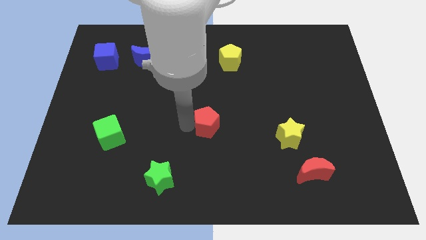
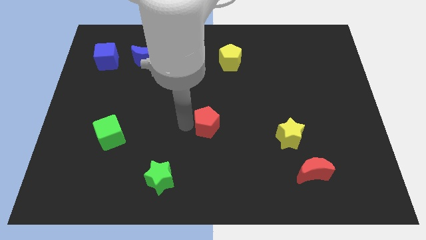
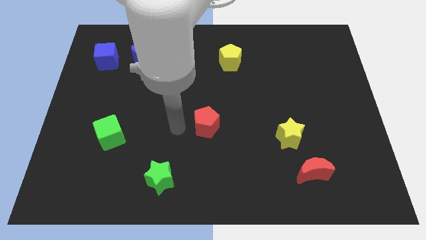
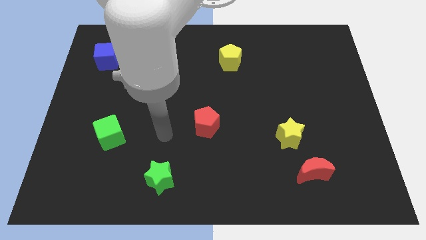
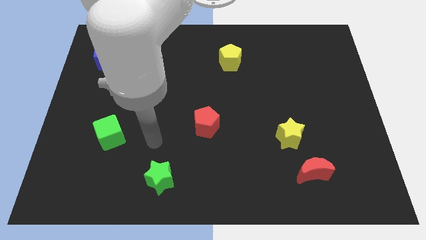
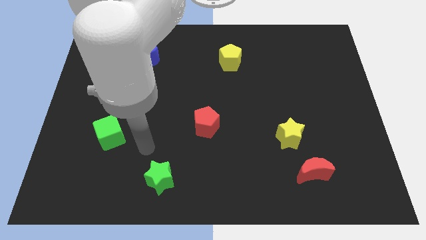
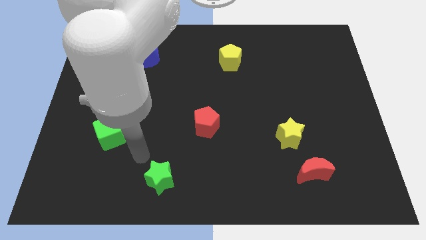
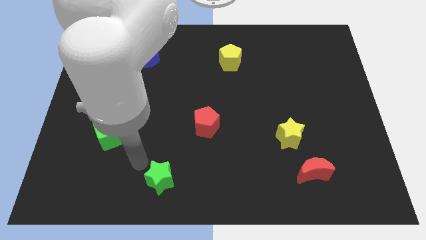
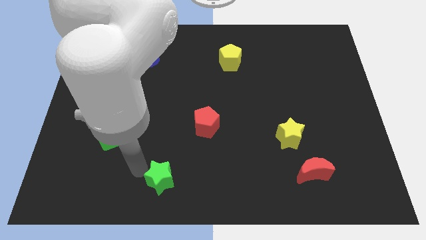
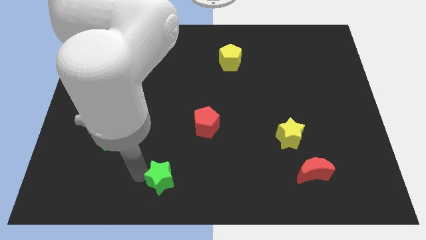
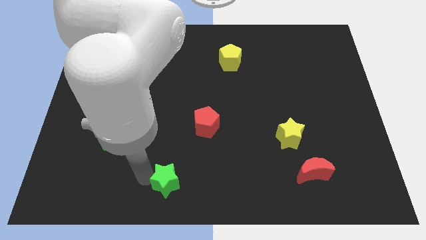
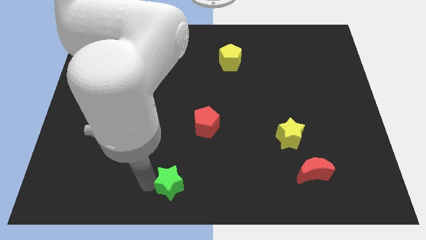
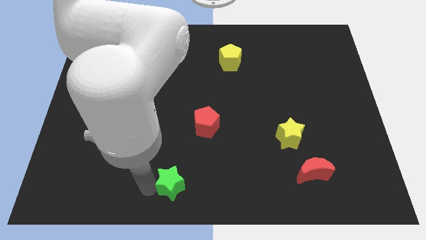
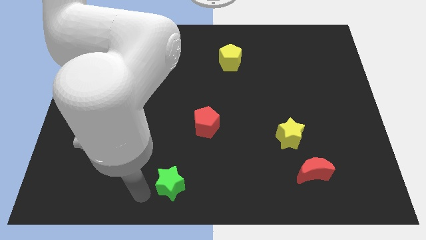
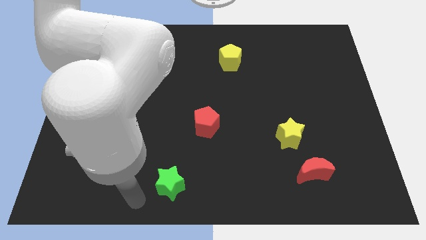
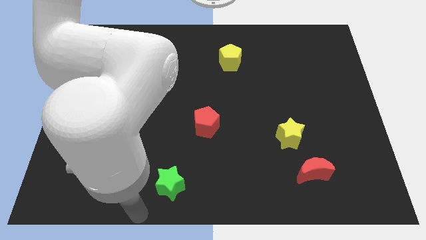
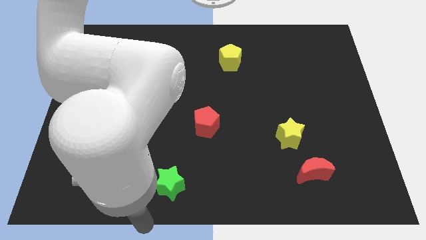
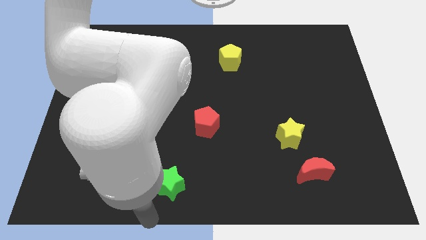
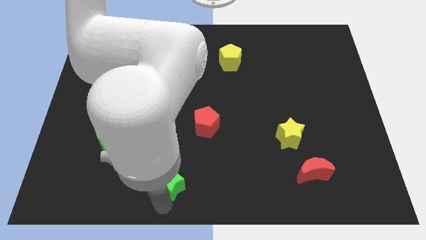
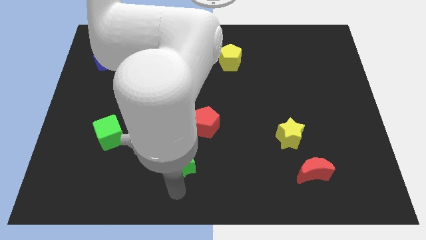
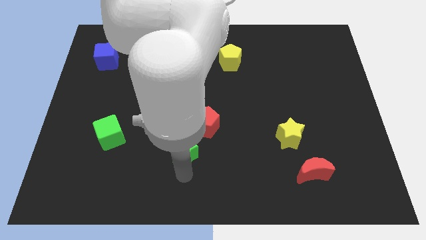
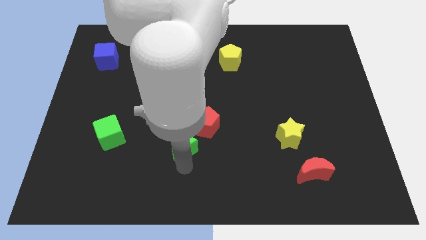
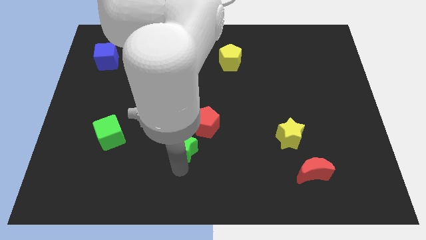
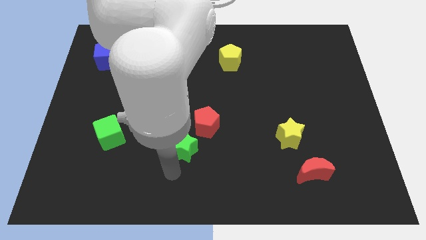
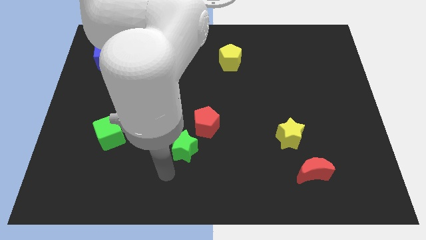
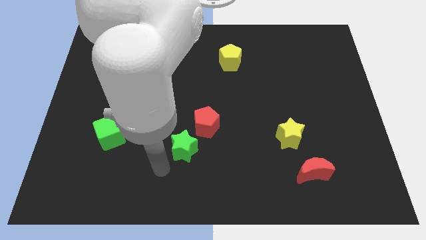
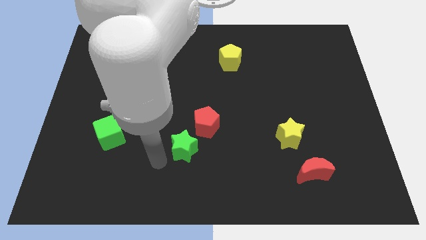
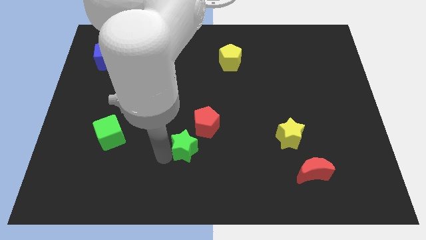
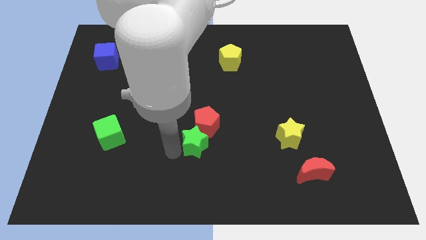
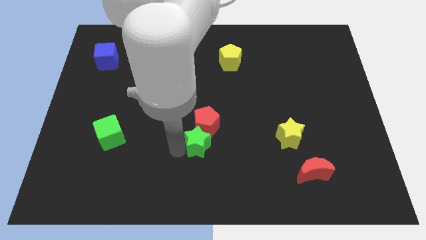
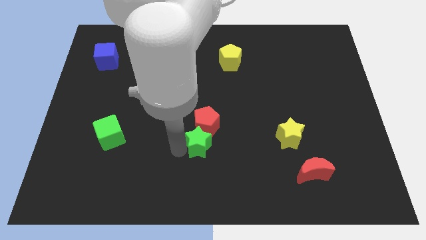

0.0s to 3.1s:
move the green star close to the bottom side of the red pentagon

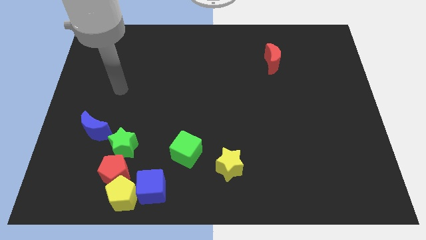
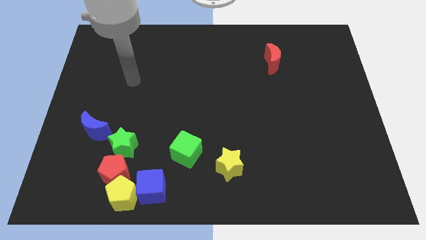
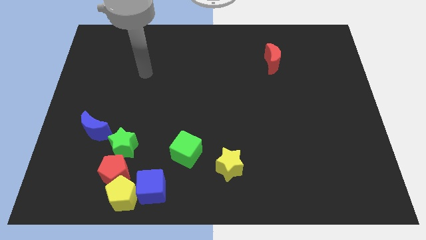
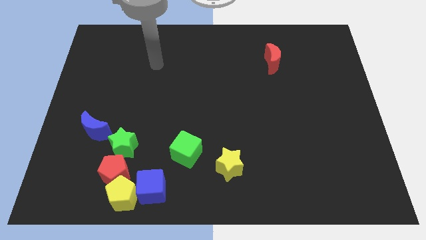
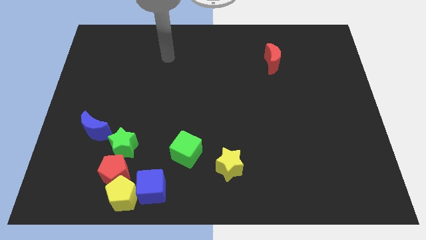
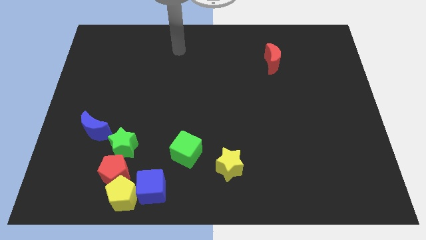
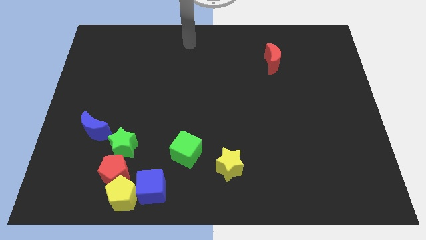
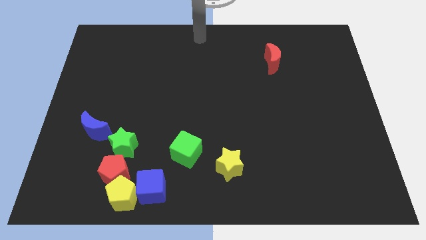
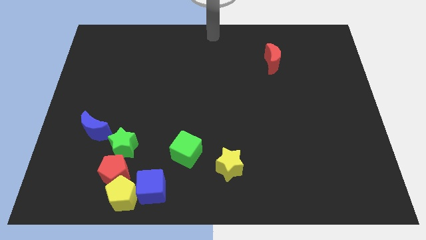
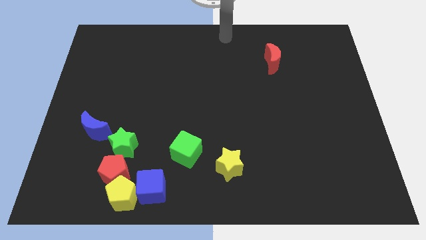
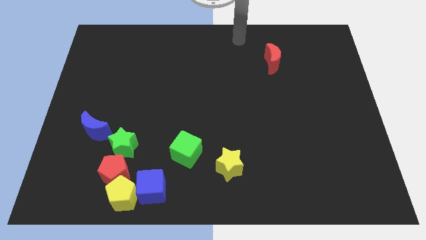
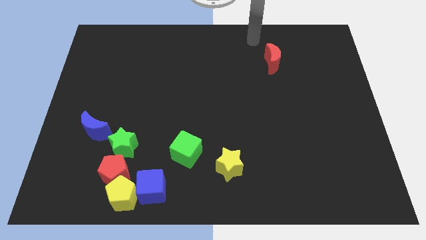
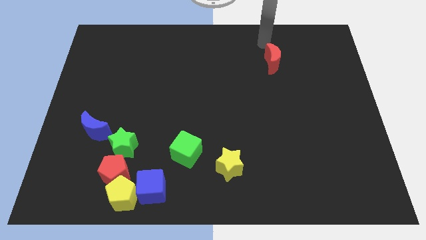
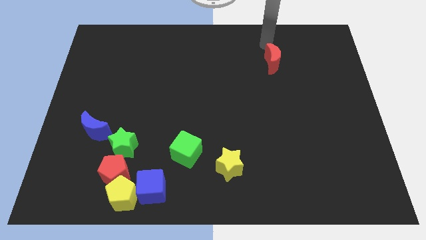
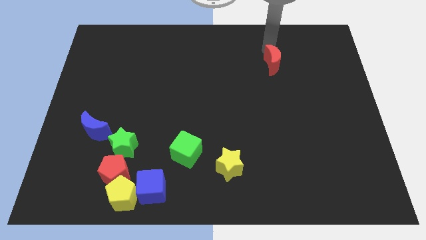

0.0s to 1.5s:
place the arm above the red moon

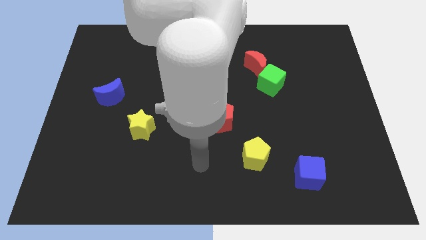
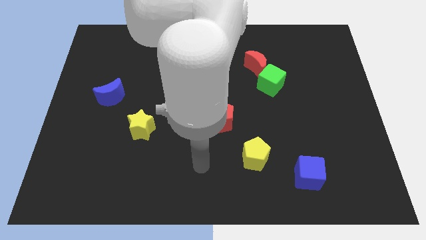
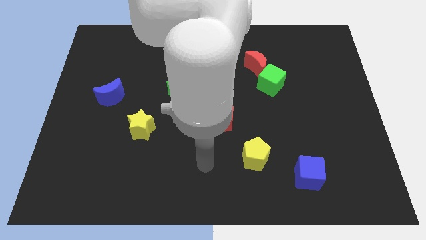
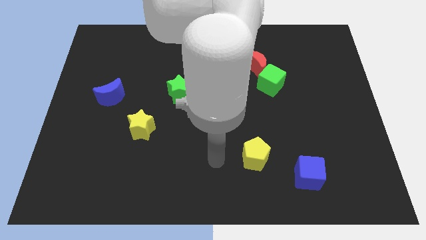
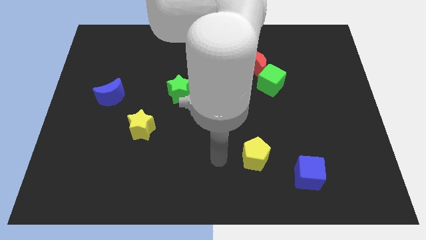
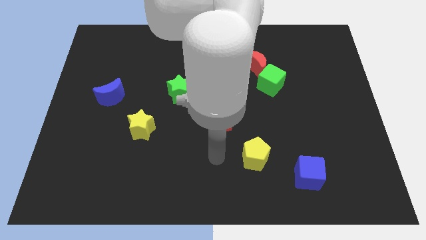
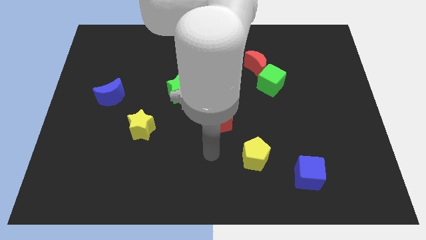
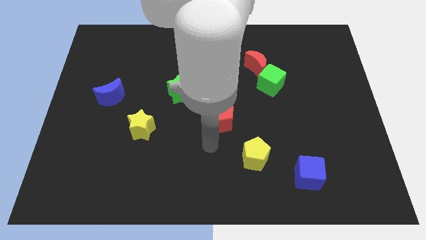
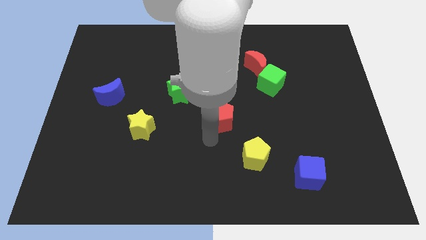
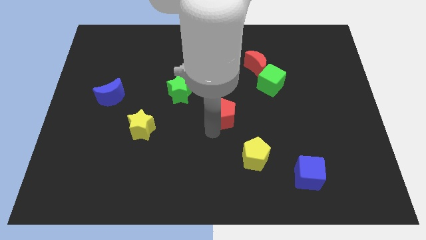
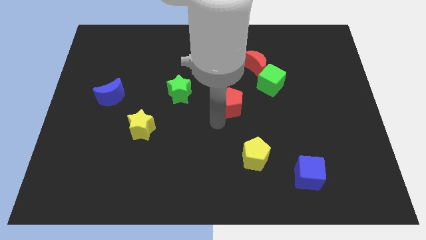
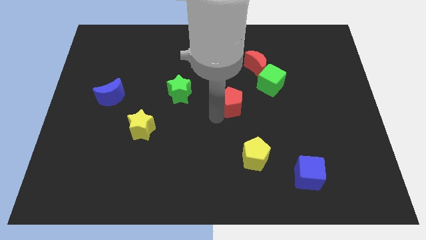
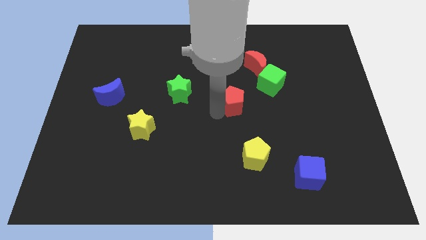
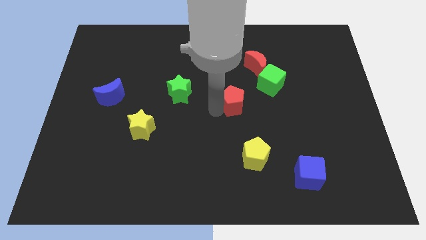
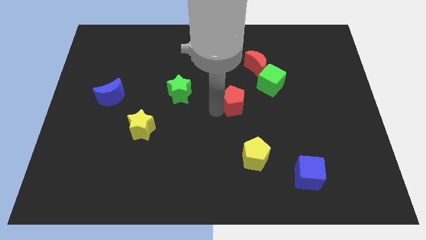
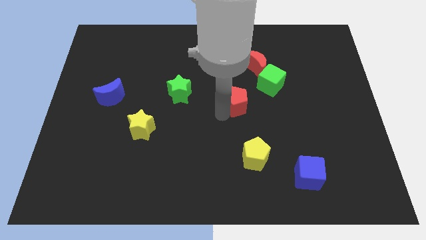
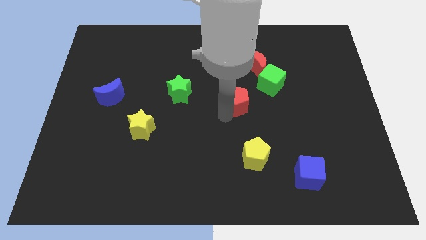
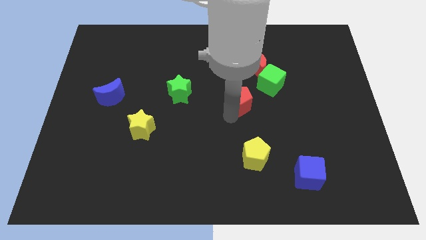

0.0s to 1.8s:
push red pentagon towards the green cube

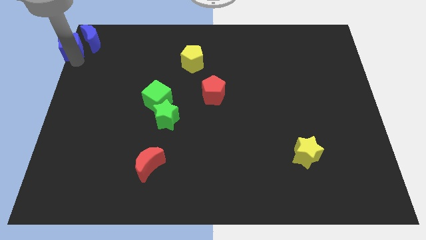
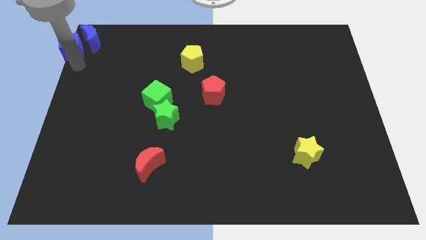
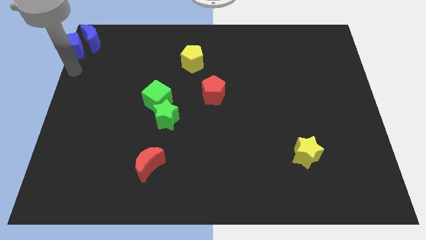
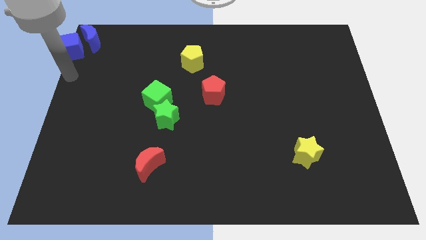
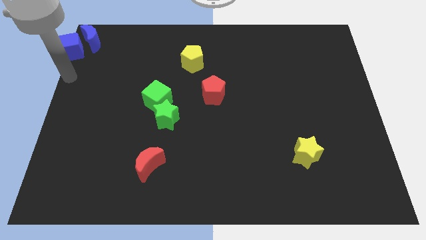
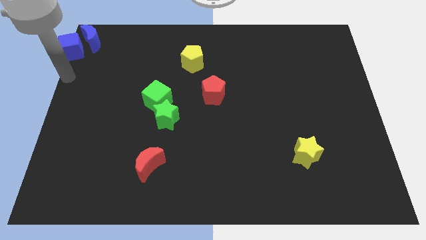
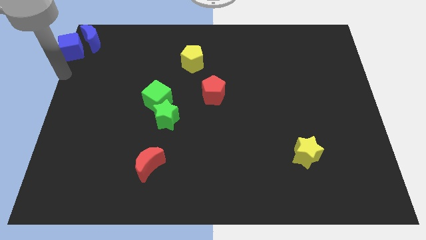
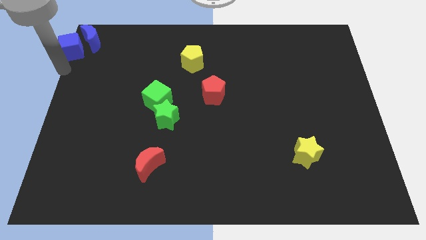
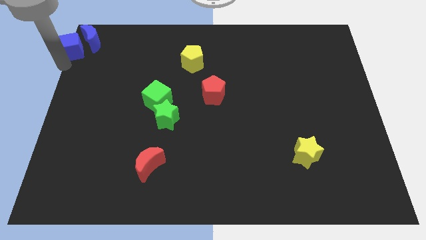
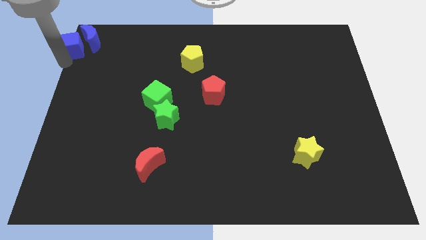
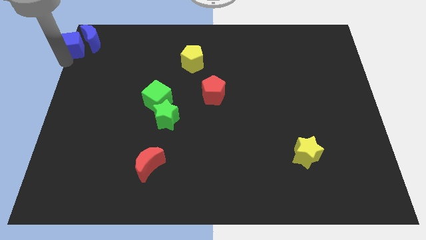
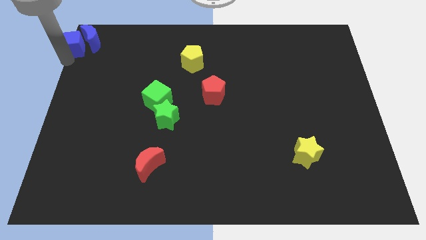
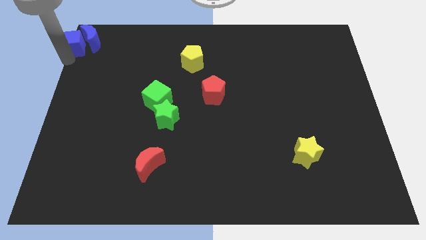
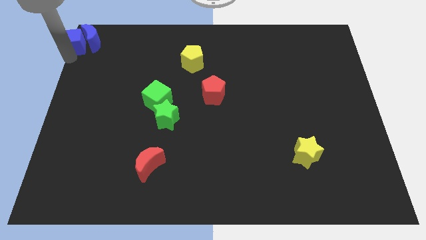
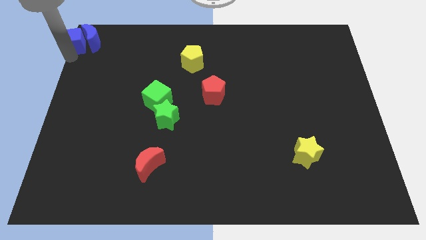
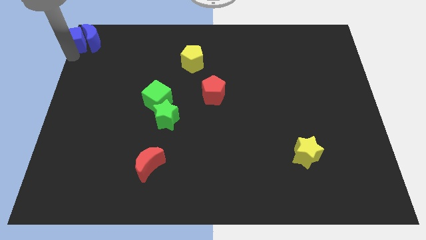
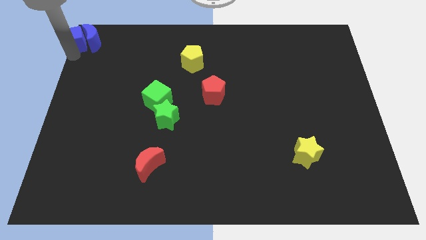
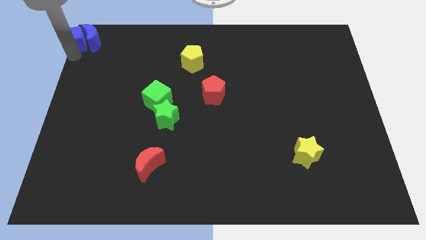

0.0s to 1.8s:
move the blue cube into the left side of the blue crescent

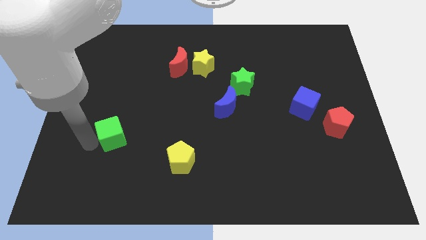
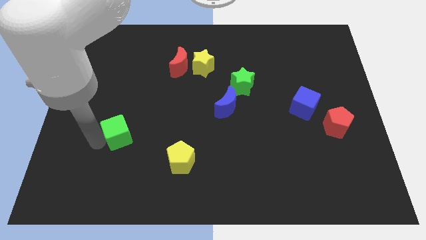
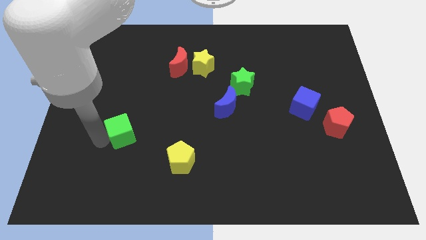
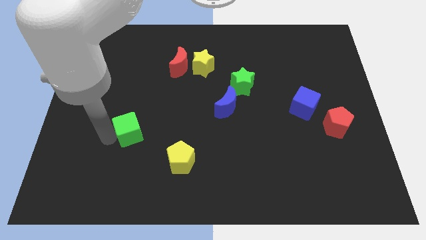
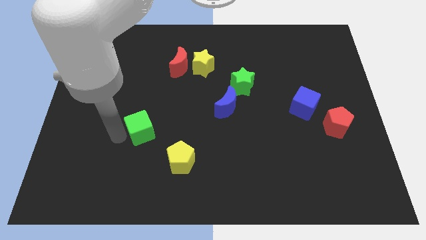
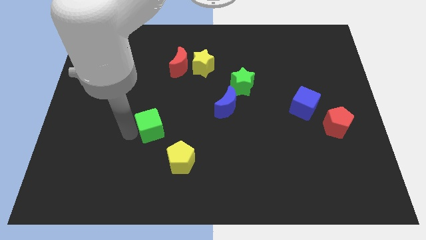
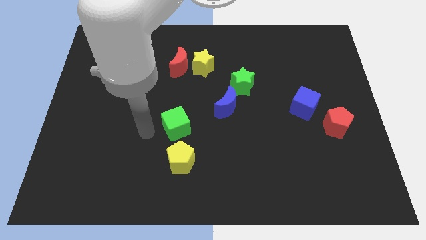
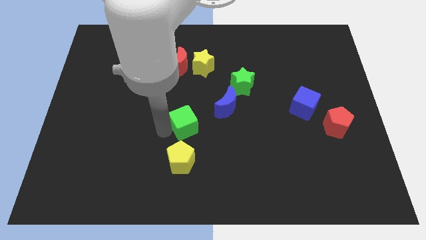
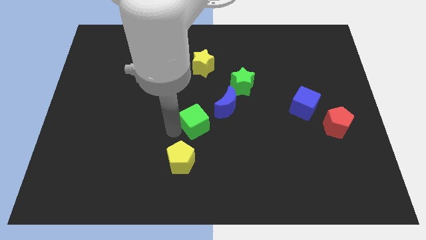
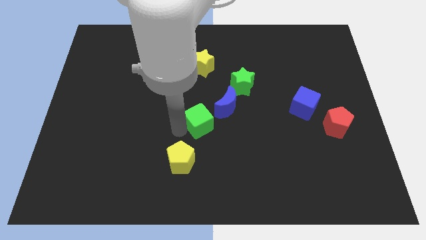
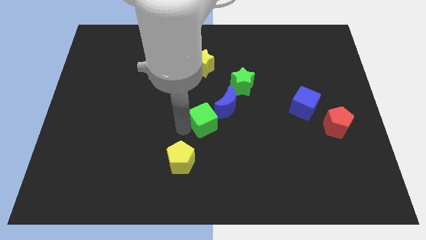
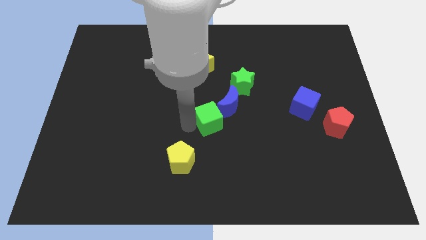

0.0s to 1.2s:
place the green cube in between blue moon and yellow pentagon
